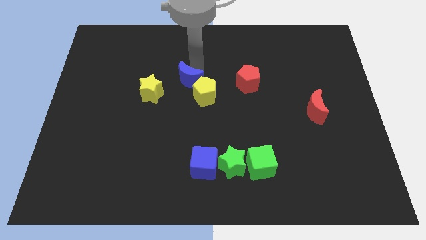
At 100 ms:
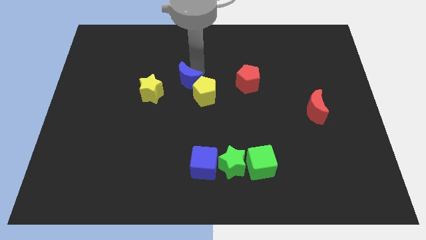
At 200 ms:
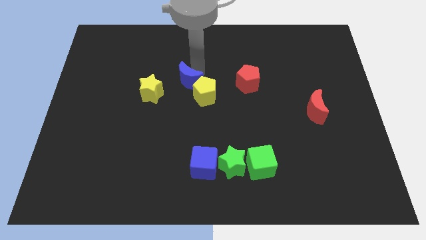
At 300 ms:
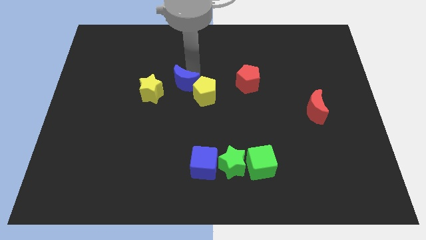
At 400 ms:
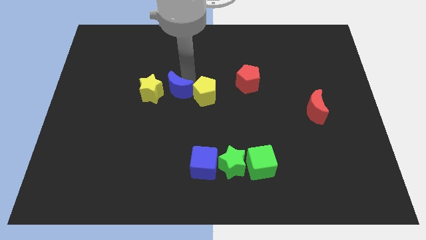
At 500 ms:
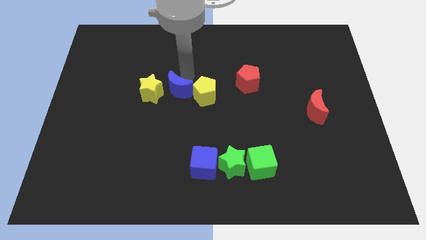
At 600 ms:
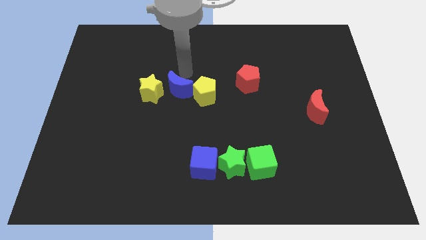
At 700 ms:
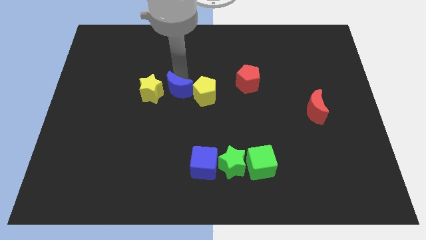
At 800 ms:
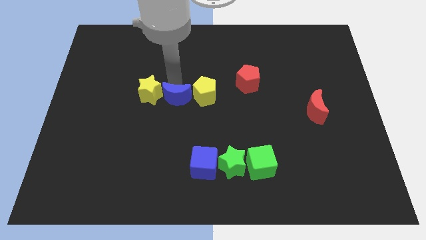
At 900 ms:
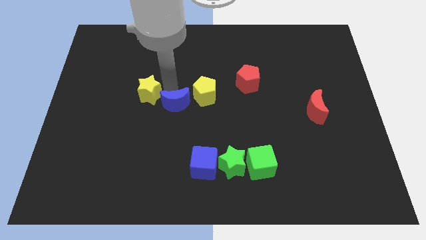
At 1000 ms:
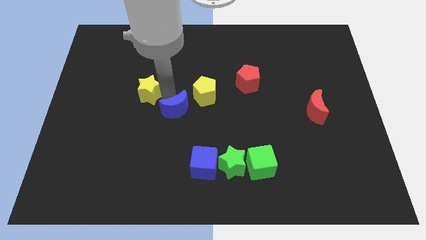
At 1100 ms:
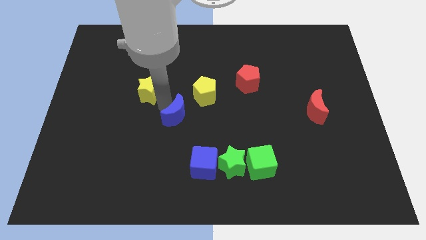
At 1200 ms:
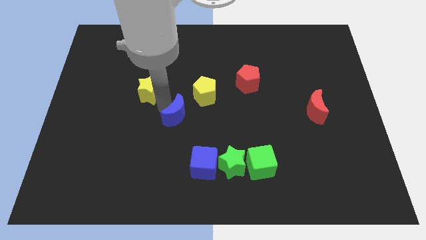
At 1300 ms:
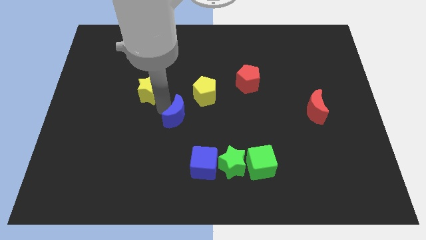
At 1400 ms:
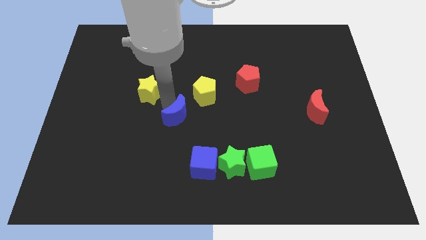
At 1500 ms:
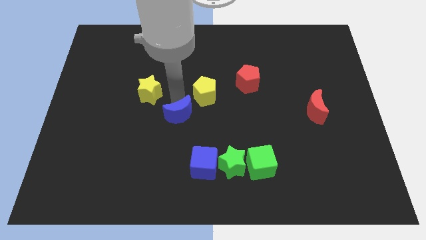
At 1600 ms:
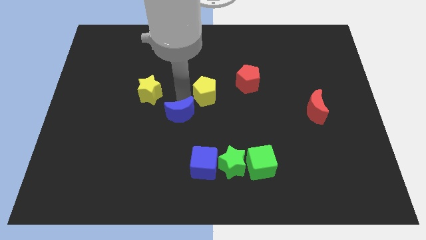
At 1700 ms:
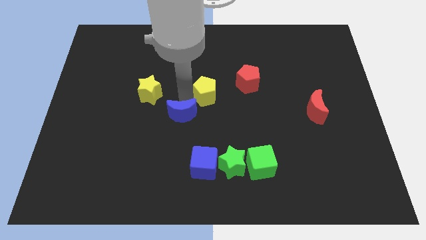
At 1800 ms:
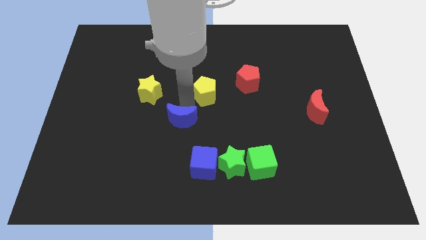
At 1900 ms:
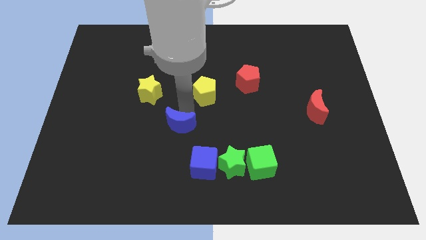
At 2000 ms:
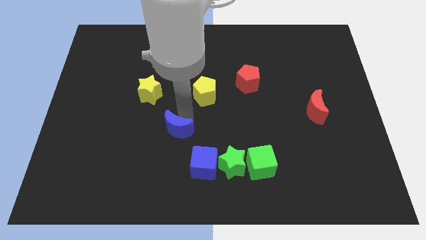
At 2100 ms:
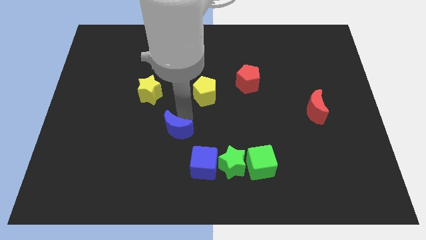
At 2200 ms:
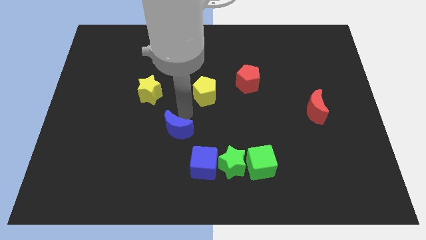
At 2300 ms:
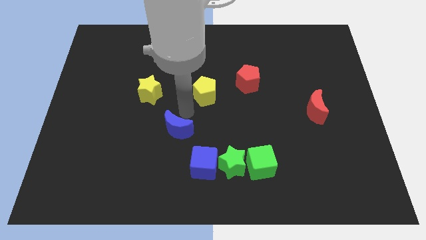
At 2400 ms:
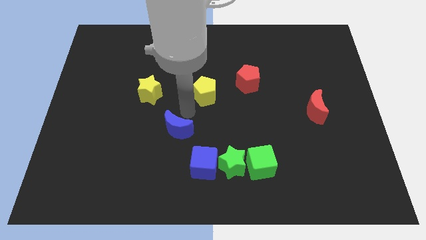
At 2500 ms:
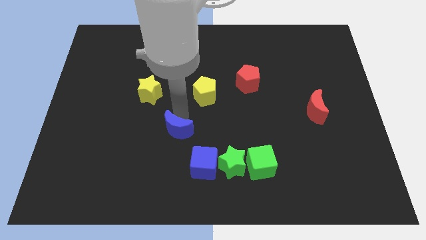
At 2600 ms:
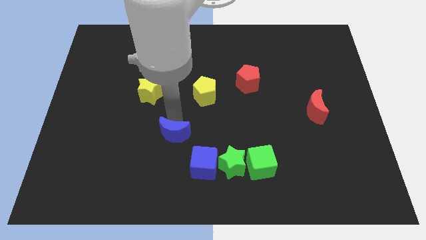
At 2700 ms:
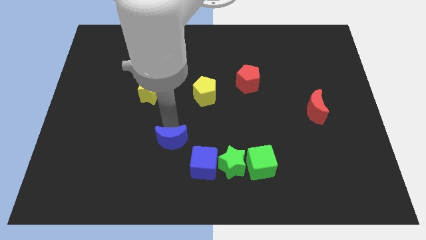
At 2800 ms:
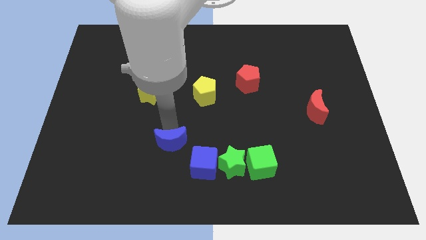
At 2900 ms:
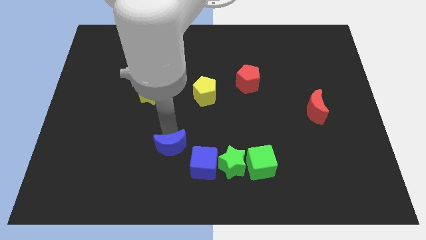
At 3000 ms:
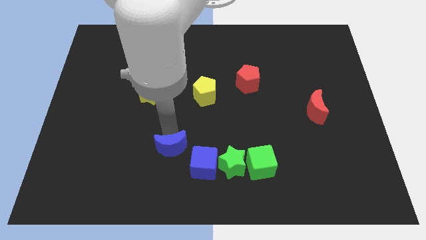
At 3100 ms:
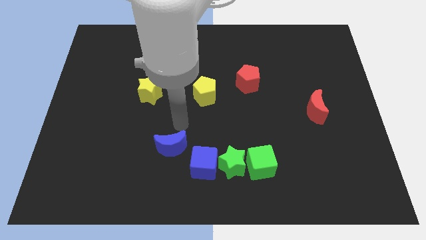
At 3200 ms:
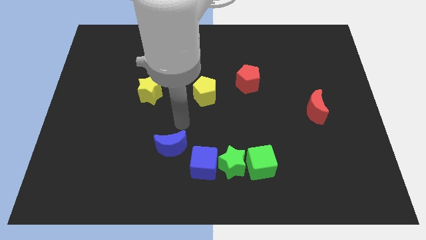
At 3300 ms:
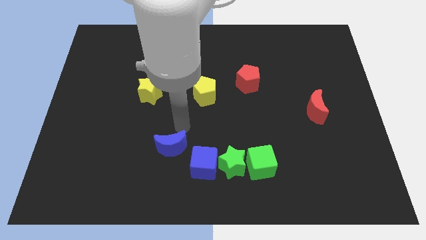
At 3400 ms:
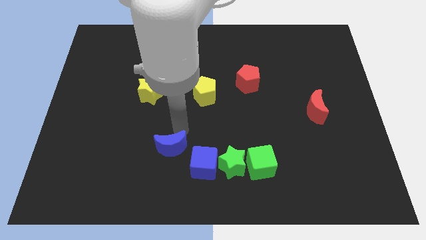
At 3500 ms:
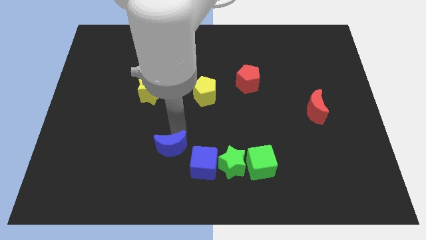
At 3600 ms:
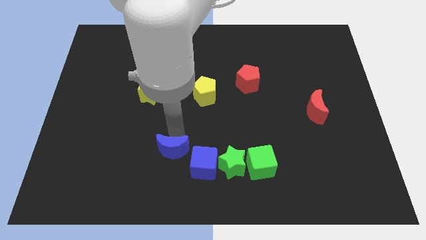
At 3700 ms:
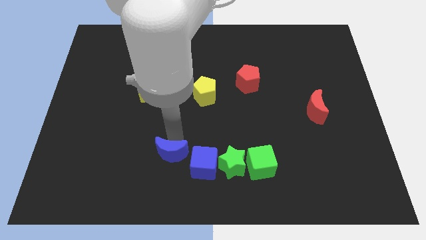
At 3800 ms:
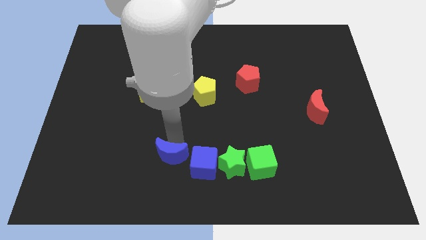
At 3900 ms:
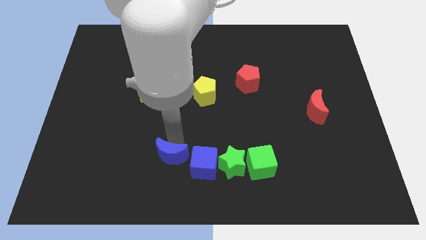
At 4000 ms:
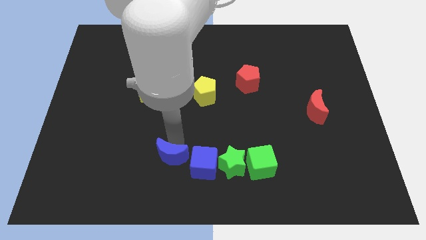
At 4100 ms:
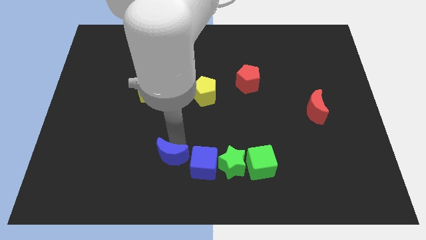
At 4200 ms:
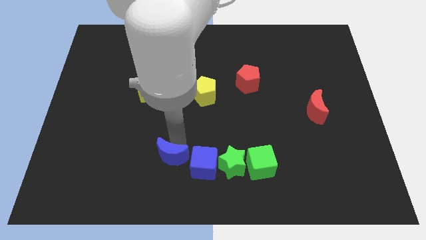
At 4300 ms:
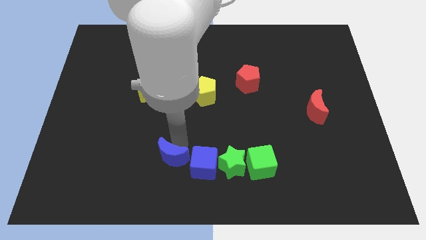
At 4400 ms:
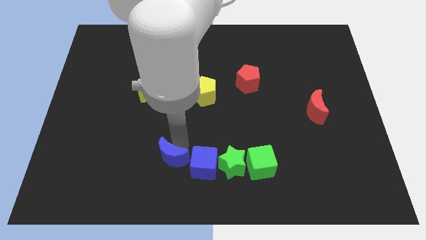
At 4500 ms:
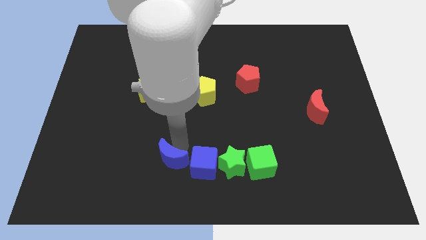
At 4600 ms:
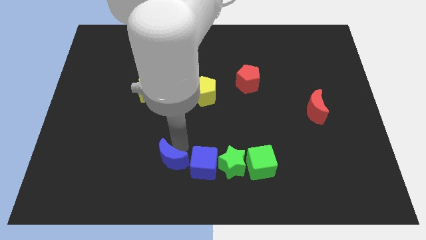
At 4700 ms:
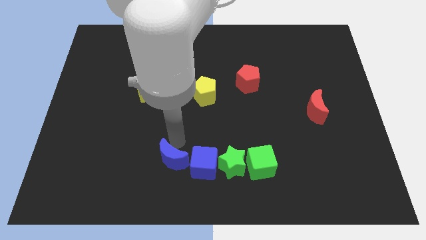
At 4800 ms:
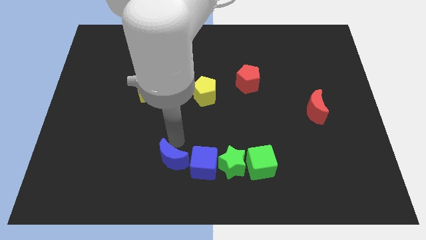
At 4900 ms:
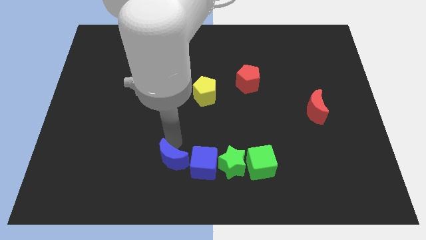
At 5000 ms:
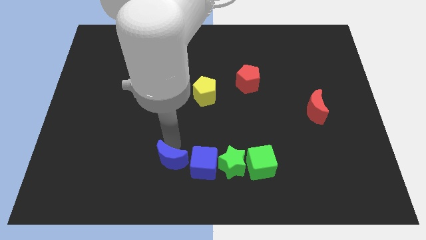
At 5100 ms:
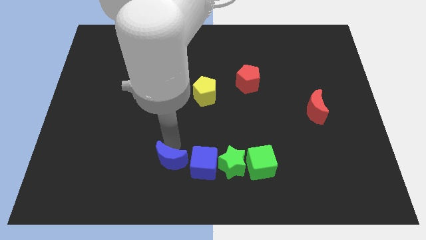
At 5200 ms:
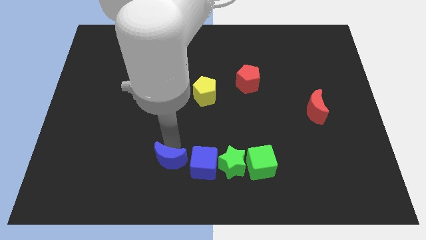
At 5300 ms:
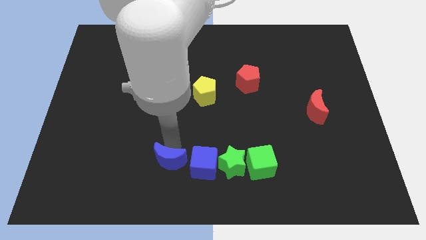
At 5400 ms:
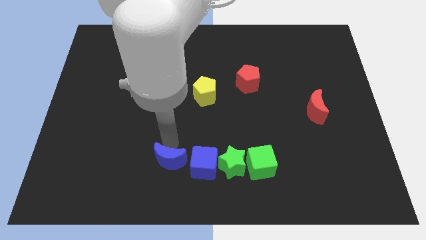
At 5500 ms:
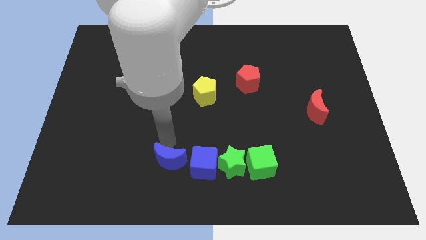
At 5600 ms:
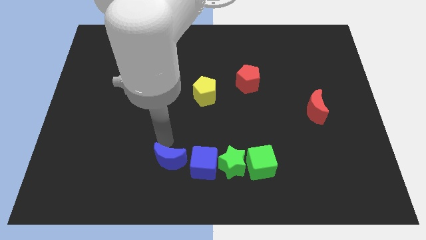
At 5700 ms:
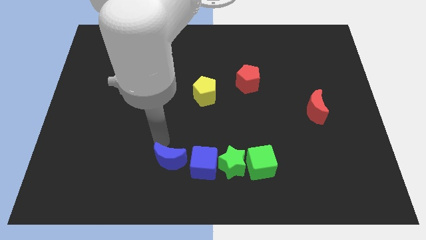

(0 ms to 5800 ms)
place the blue crescent to the left of the blue cube

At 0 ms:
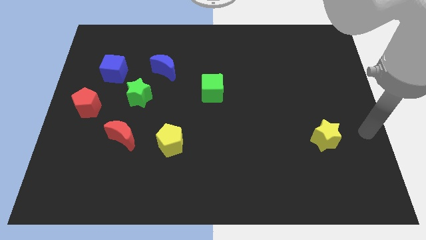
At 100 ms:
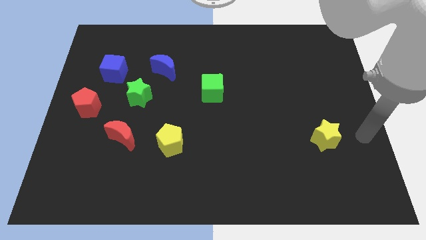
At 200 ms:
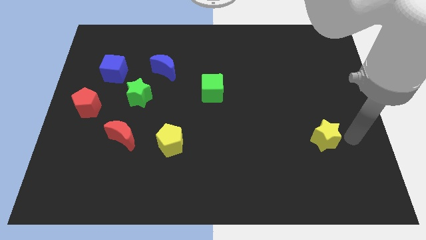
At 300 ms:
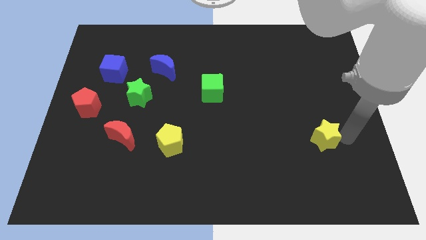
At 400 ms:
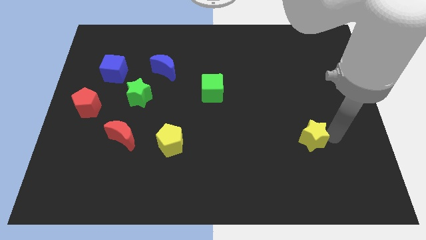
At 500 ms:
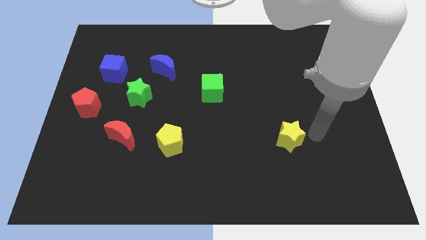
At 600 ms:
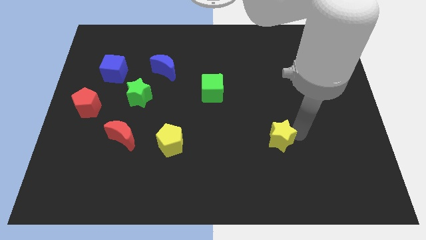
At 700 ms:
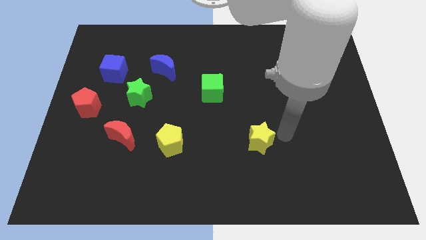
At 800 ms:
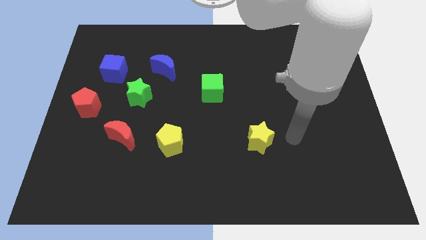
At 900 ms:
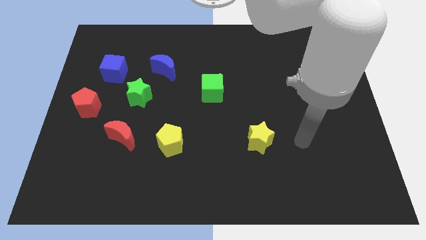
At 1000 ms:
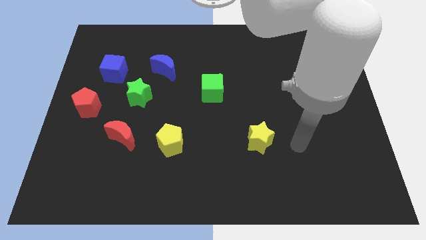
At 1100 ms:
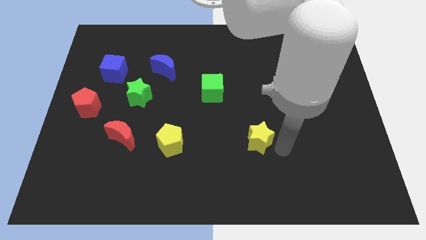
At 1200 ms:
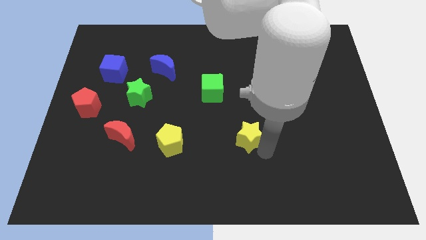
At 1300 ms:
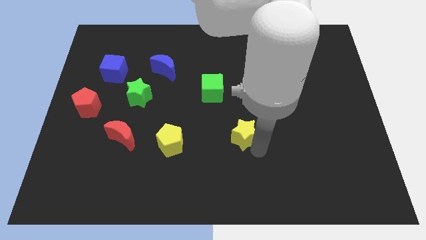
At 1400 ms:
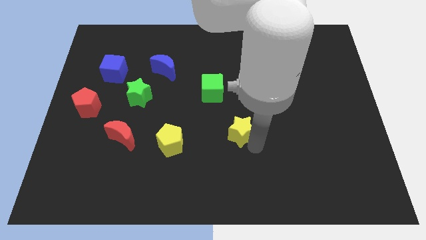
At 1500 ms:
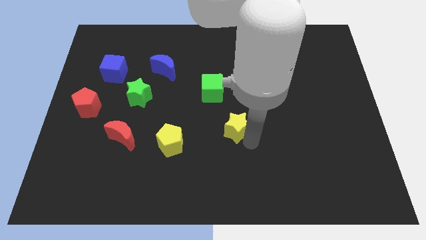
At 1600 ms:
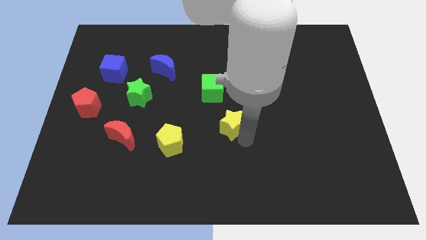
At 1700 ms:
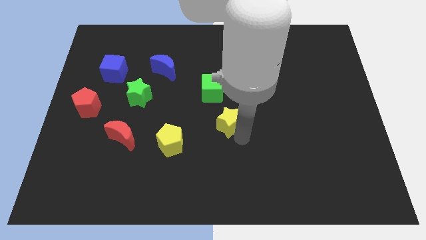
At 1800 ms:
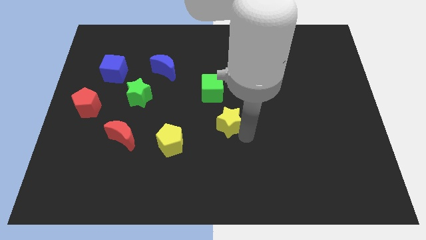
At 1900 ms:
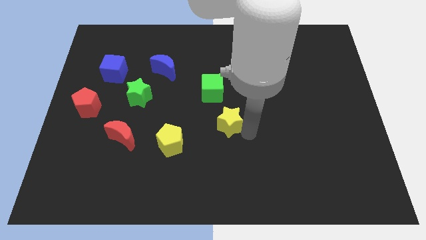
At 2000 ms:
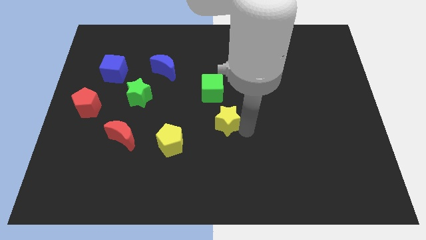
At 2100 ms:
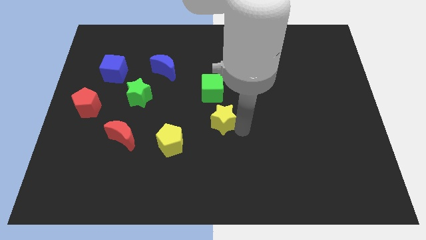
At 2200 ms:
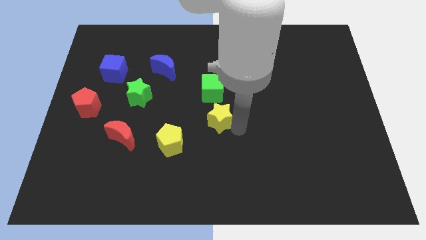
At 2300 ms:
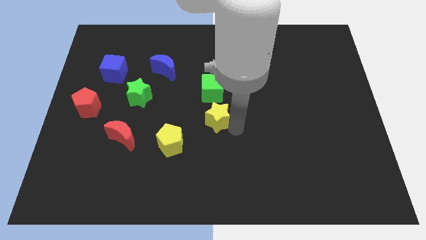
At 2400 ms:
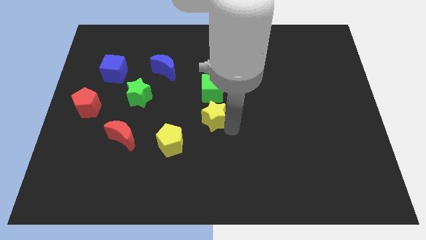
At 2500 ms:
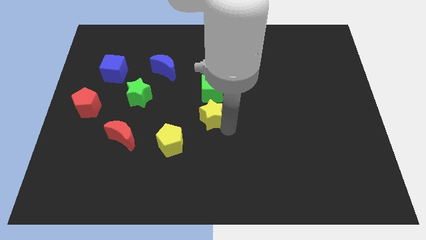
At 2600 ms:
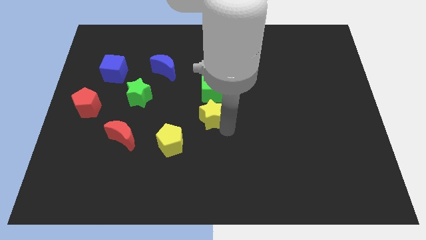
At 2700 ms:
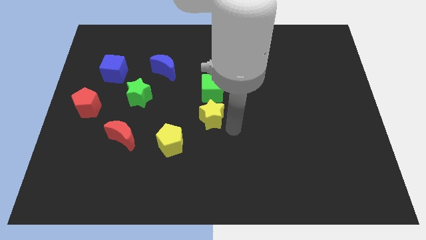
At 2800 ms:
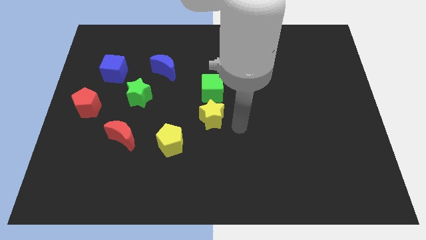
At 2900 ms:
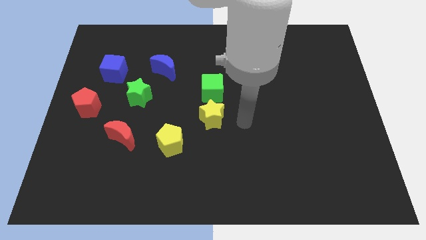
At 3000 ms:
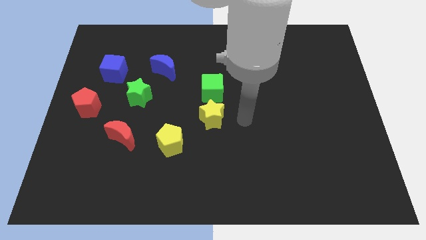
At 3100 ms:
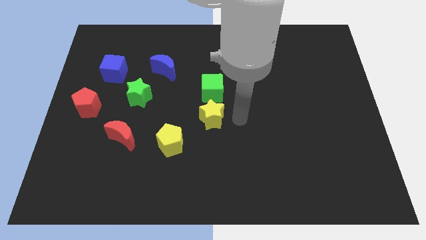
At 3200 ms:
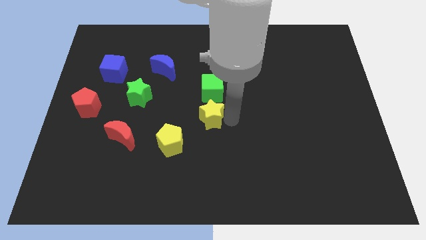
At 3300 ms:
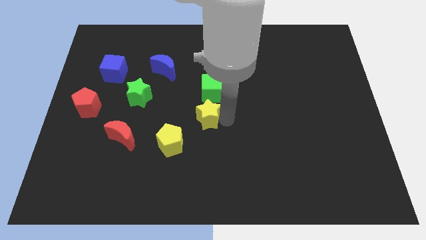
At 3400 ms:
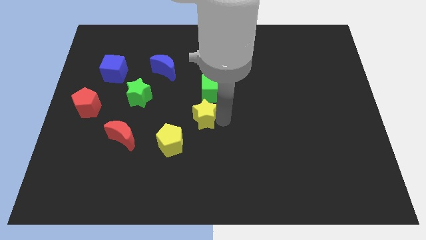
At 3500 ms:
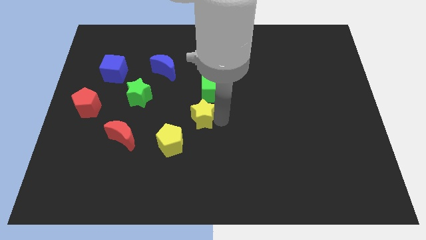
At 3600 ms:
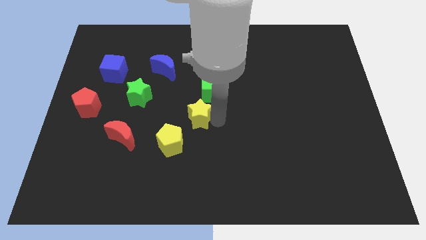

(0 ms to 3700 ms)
place the yellow star below the green cube
